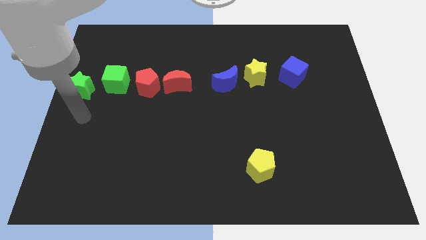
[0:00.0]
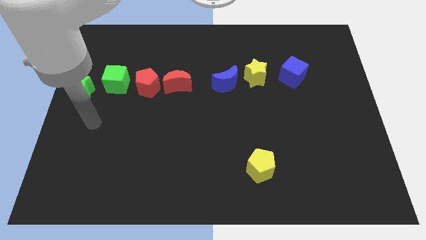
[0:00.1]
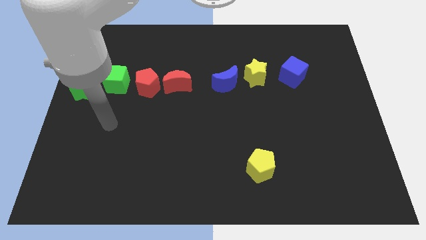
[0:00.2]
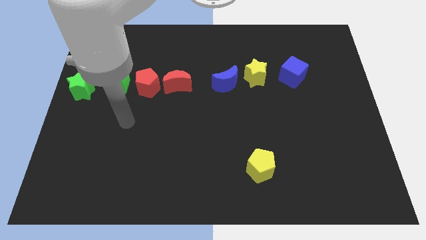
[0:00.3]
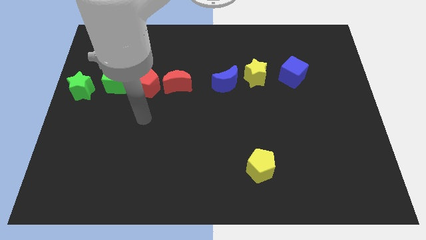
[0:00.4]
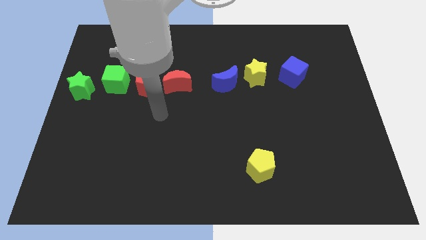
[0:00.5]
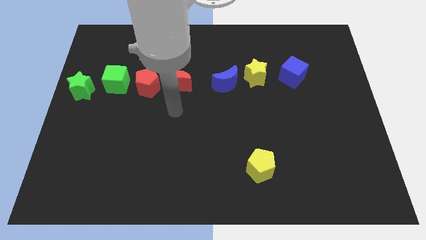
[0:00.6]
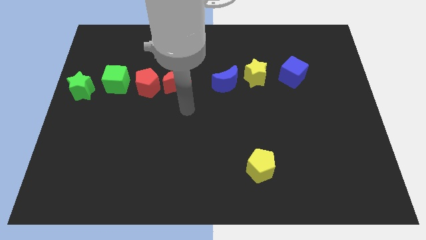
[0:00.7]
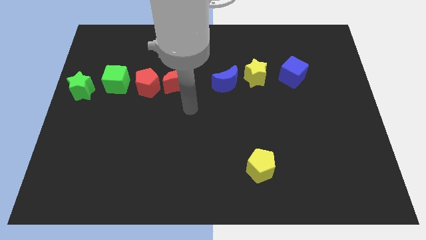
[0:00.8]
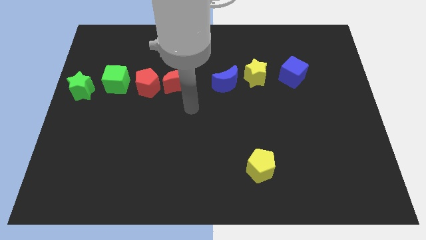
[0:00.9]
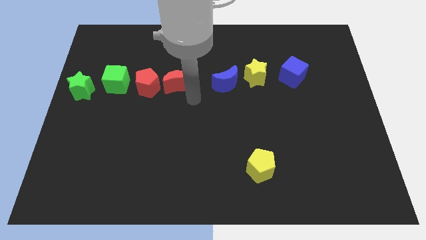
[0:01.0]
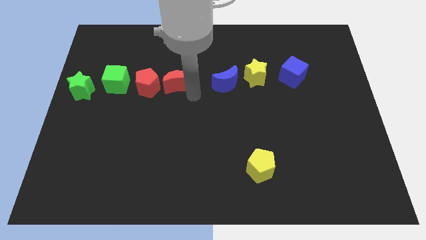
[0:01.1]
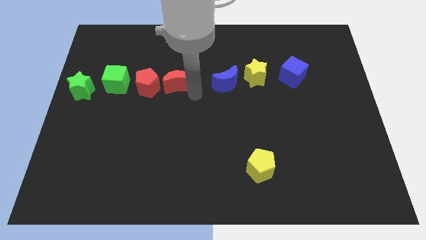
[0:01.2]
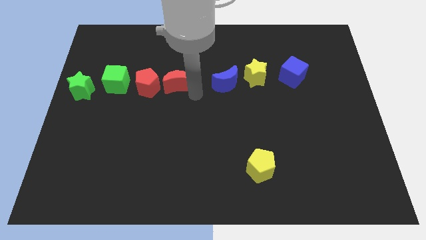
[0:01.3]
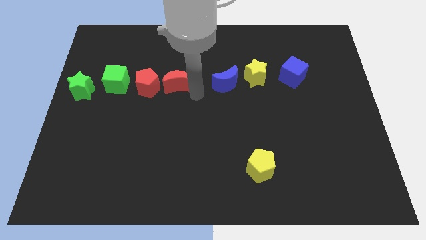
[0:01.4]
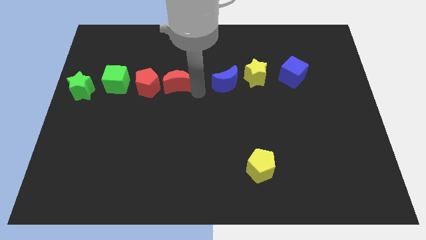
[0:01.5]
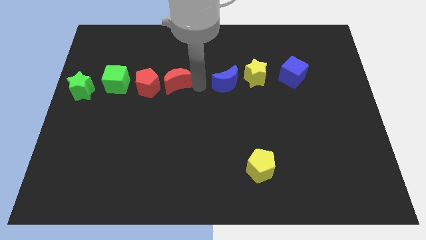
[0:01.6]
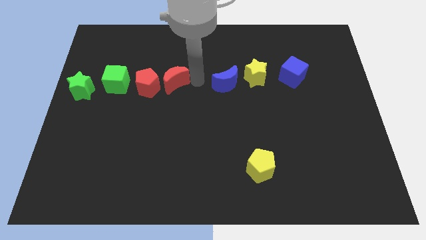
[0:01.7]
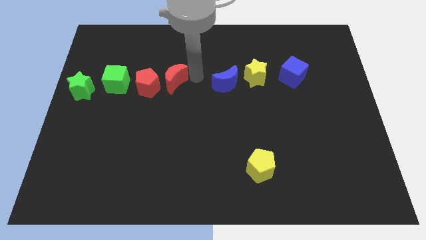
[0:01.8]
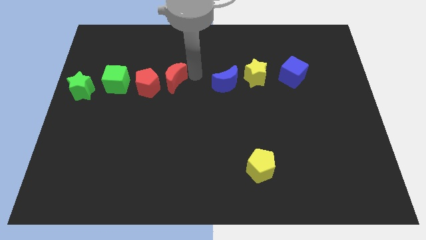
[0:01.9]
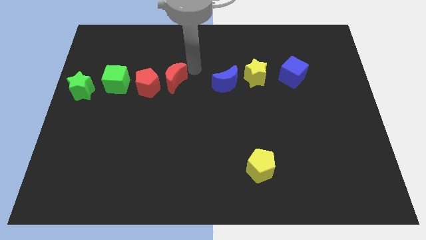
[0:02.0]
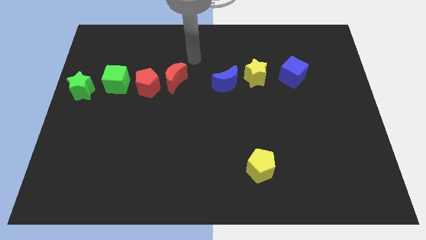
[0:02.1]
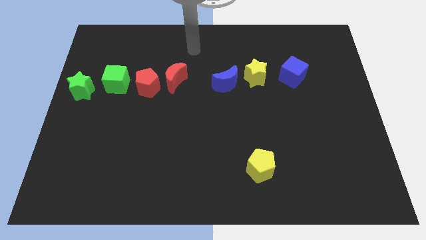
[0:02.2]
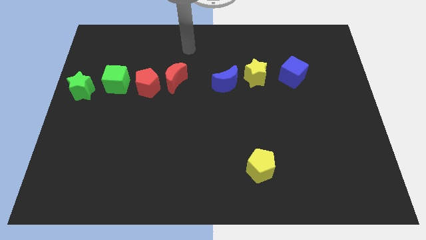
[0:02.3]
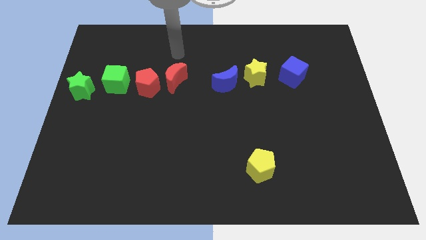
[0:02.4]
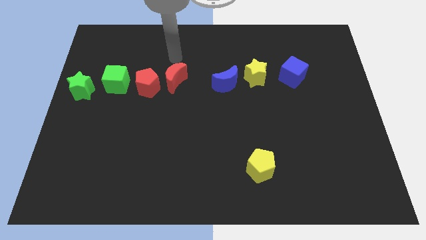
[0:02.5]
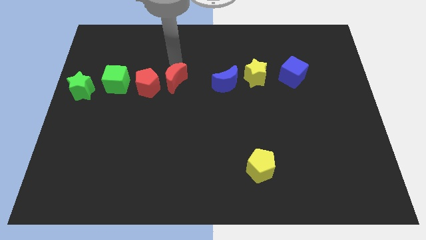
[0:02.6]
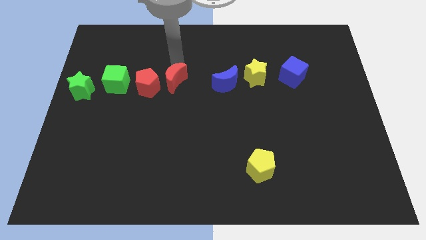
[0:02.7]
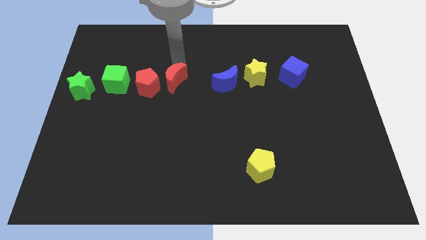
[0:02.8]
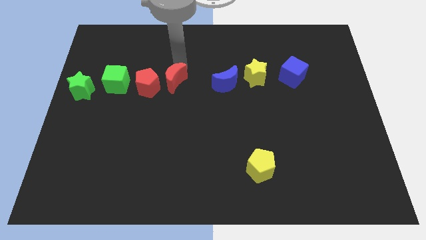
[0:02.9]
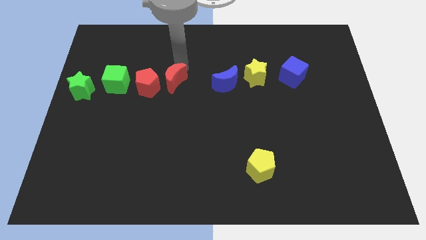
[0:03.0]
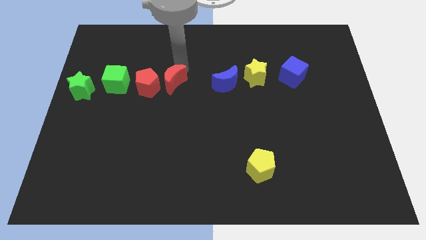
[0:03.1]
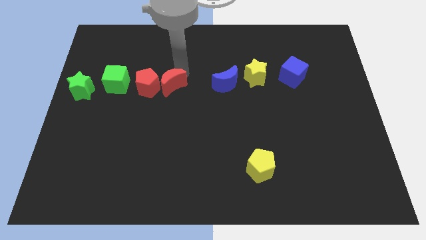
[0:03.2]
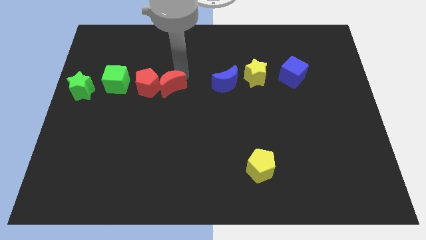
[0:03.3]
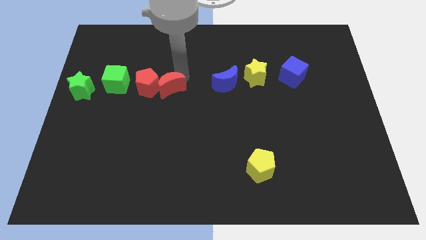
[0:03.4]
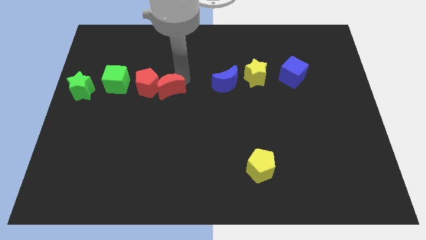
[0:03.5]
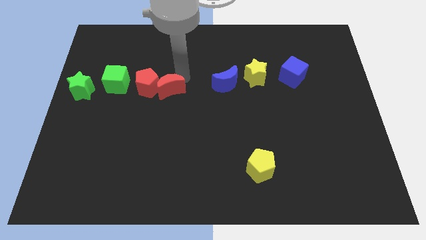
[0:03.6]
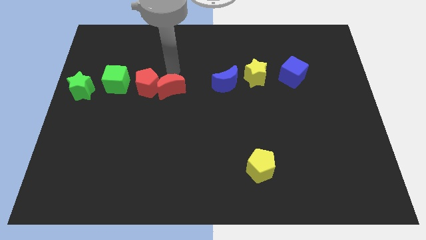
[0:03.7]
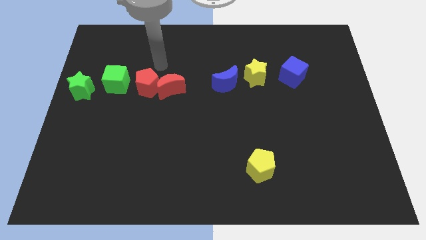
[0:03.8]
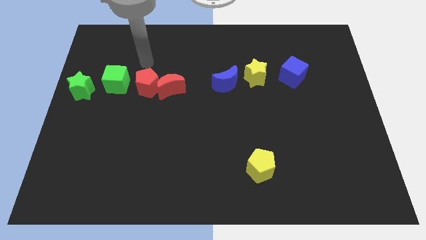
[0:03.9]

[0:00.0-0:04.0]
move the red crescent to the right of the red pentagon

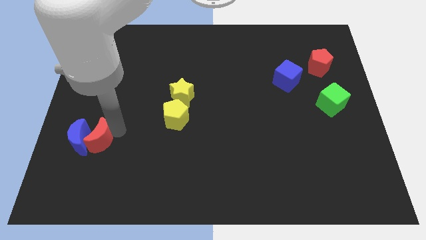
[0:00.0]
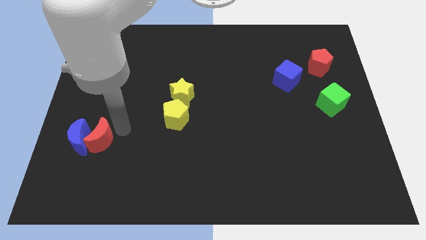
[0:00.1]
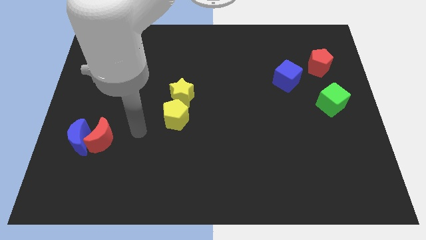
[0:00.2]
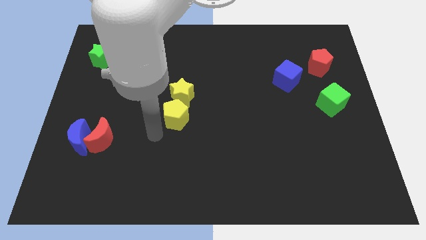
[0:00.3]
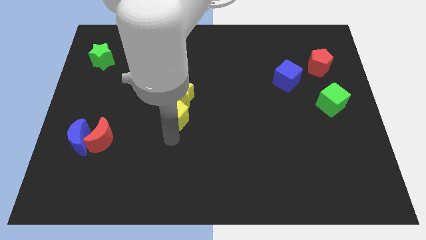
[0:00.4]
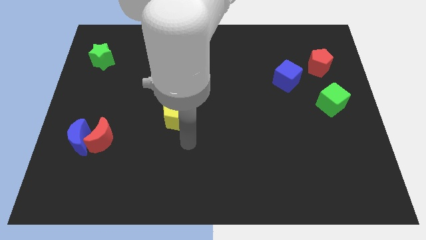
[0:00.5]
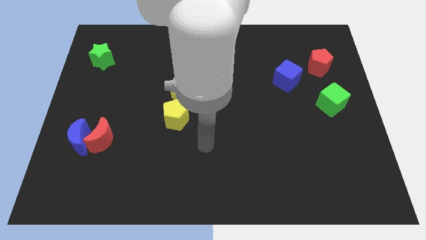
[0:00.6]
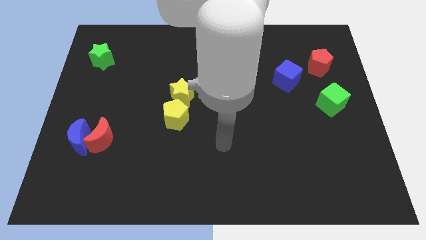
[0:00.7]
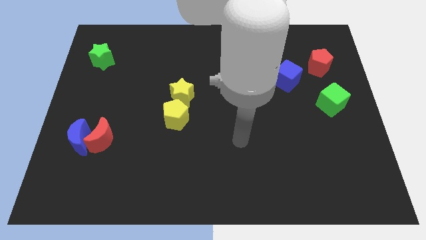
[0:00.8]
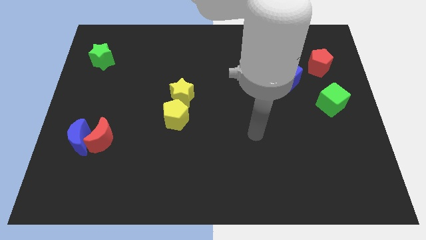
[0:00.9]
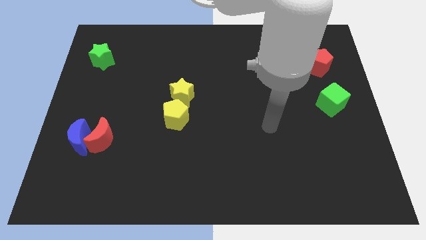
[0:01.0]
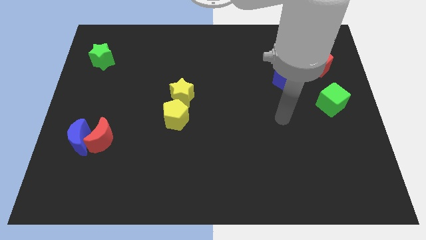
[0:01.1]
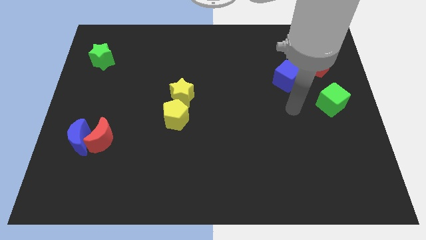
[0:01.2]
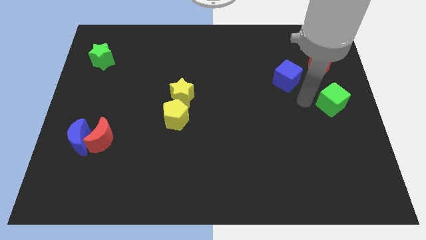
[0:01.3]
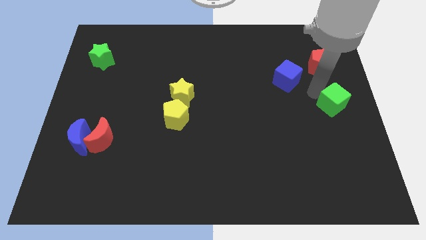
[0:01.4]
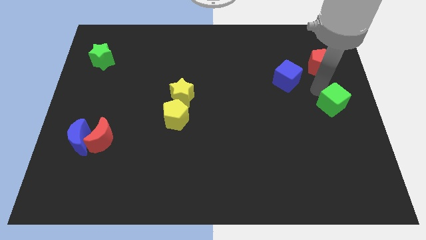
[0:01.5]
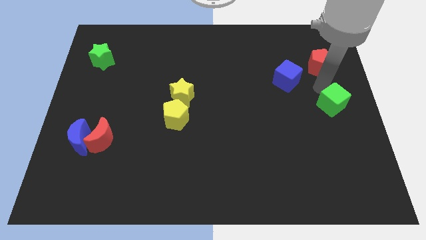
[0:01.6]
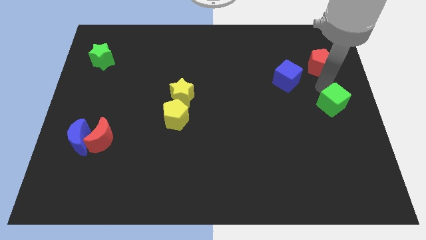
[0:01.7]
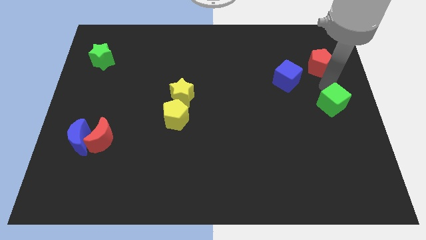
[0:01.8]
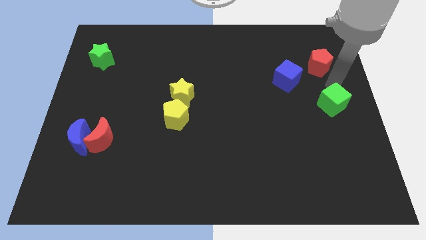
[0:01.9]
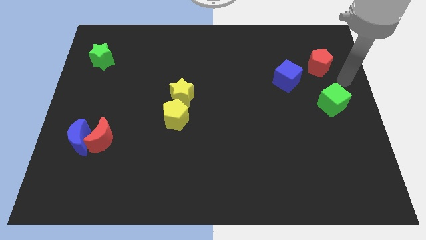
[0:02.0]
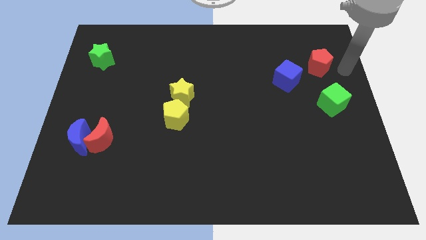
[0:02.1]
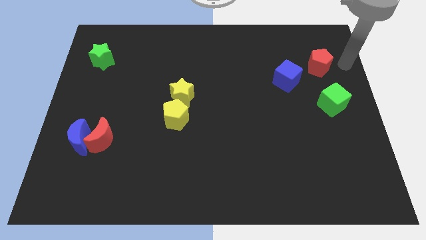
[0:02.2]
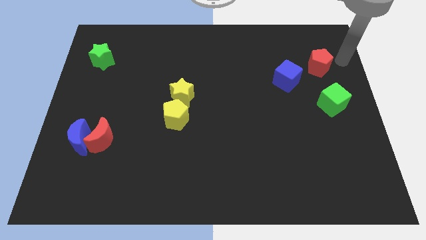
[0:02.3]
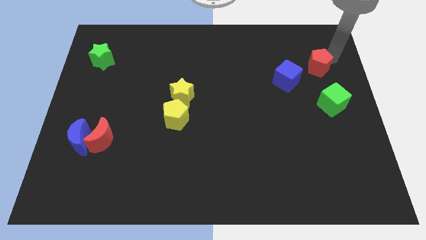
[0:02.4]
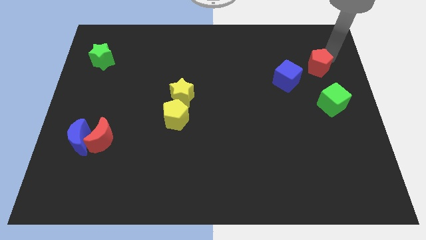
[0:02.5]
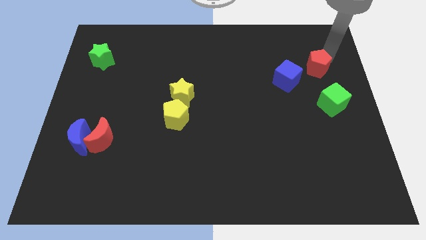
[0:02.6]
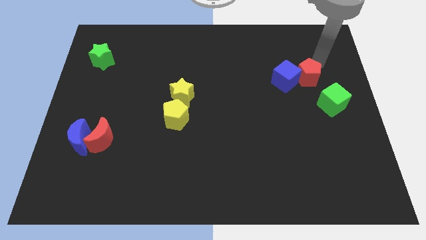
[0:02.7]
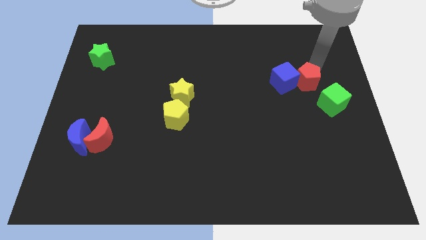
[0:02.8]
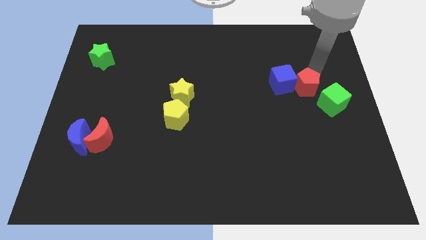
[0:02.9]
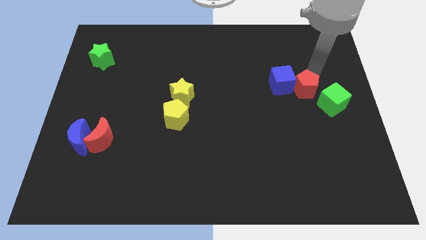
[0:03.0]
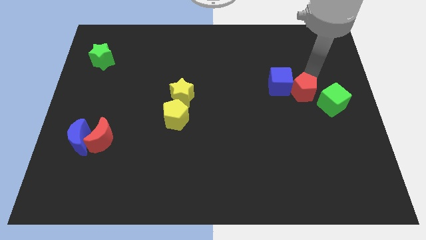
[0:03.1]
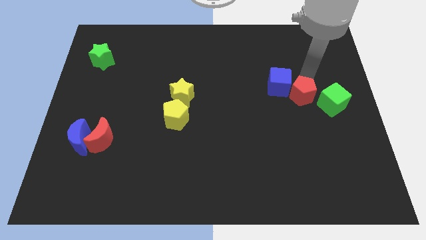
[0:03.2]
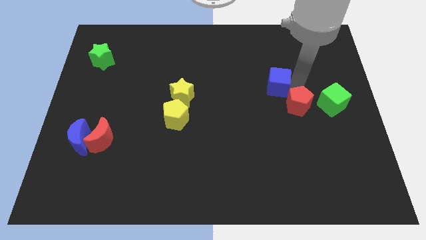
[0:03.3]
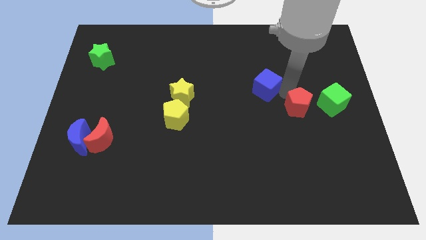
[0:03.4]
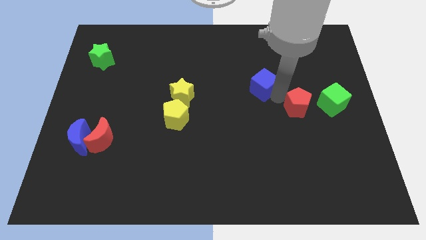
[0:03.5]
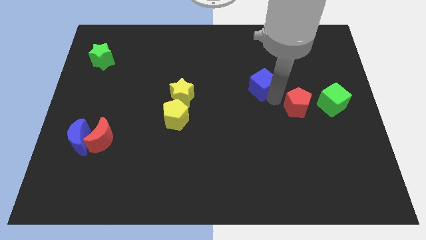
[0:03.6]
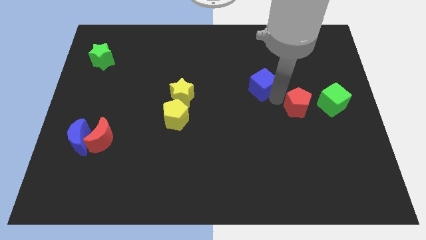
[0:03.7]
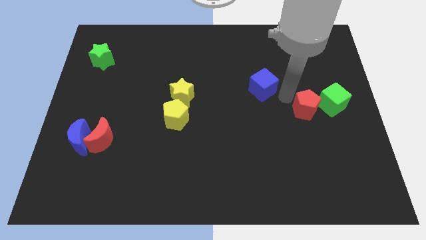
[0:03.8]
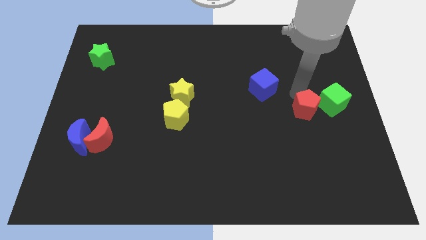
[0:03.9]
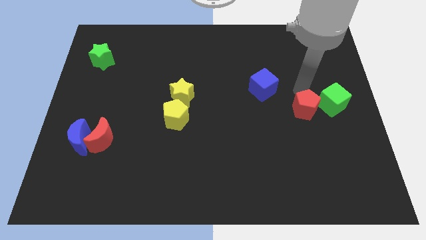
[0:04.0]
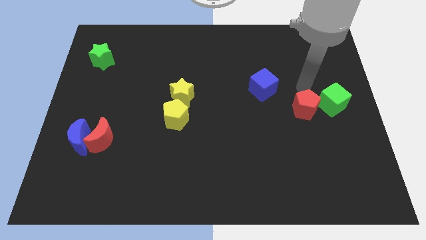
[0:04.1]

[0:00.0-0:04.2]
place the red pentagon to the left side of the green cube

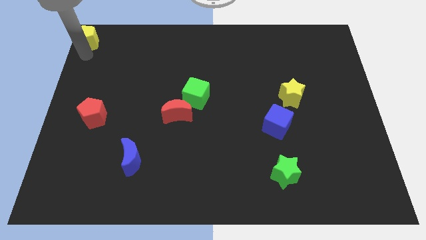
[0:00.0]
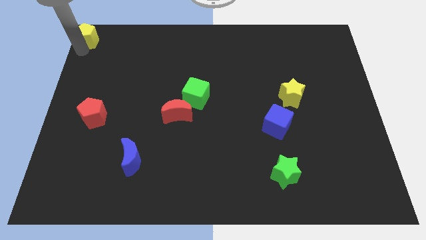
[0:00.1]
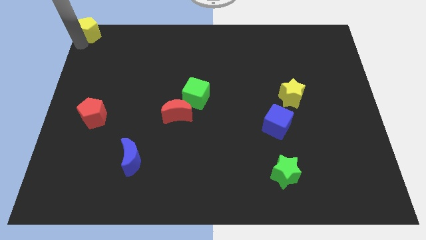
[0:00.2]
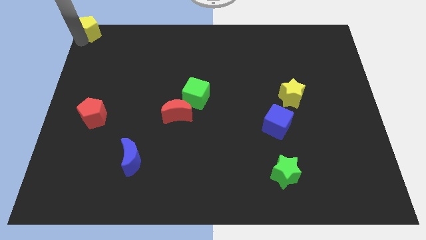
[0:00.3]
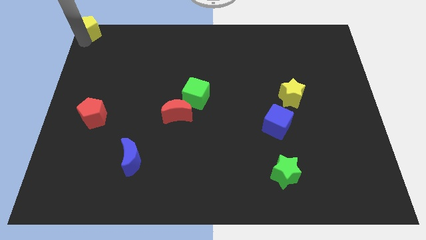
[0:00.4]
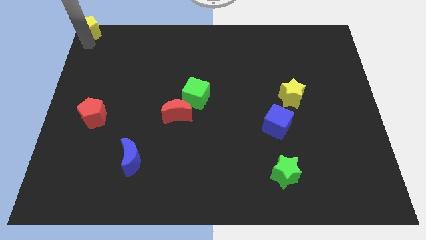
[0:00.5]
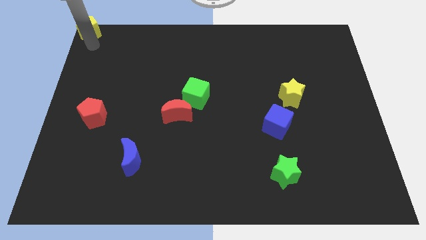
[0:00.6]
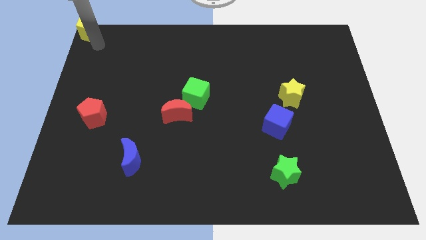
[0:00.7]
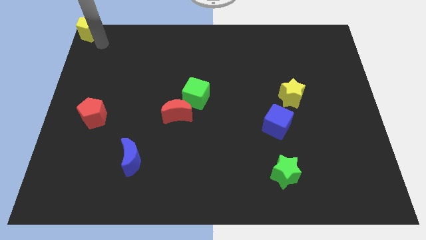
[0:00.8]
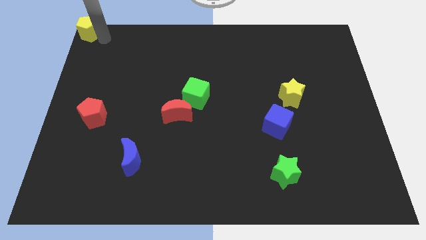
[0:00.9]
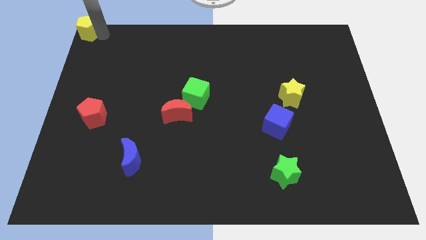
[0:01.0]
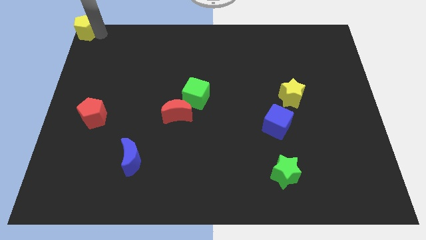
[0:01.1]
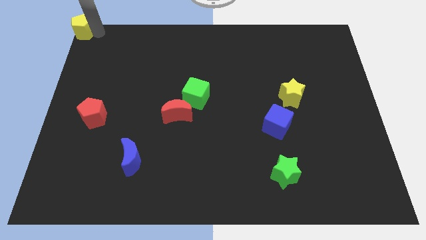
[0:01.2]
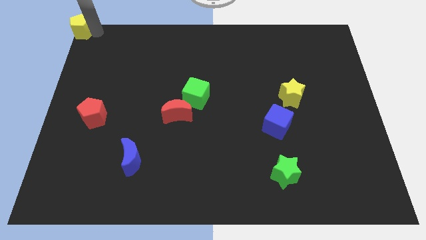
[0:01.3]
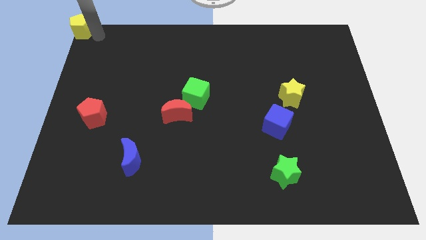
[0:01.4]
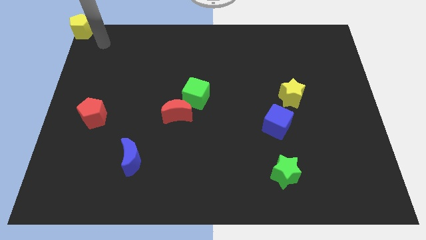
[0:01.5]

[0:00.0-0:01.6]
move the yellow pentagon to the top left edge of the board
